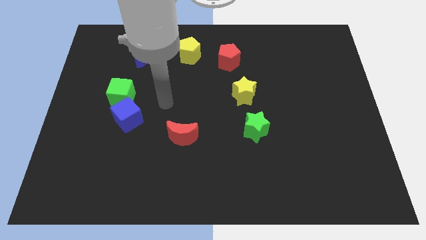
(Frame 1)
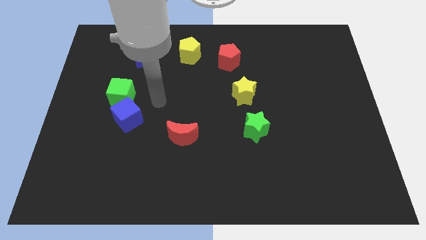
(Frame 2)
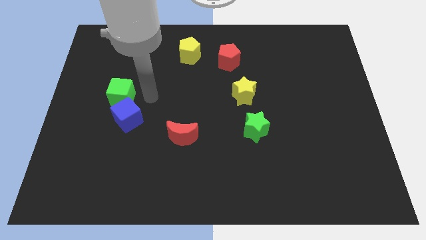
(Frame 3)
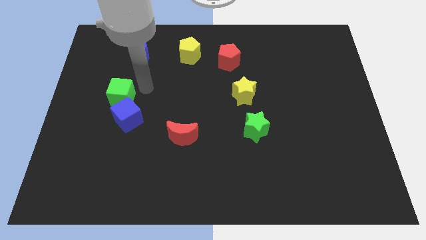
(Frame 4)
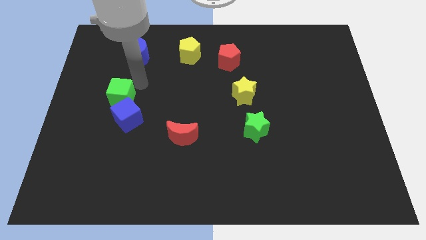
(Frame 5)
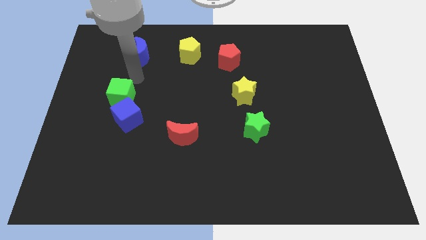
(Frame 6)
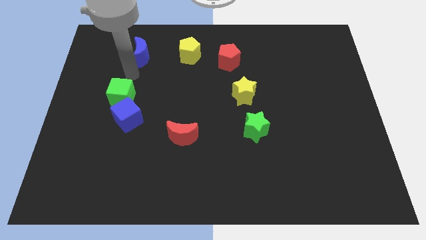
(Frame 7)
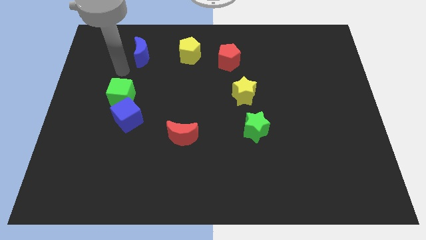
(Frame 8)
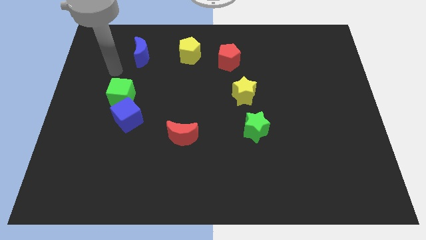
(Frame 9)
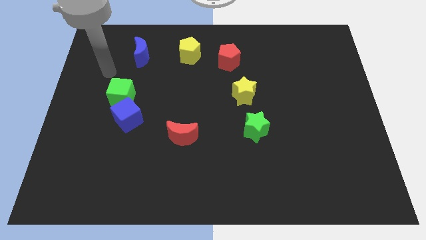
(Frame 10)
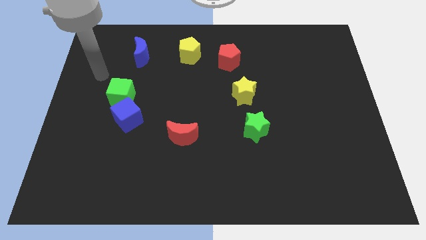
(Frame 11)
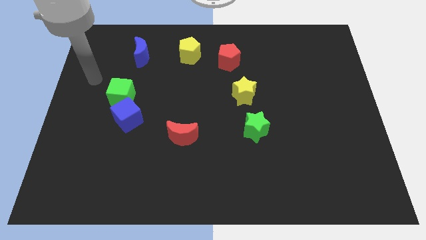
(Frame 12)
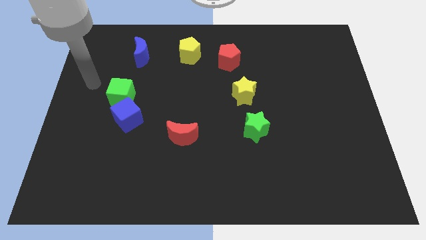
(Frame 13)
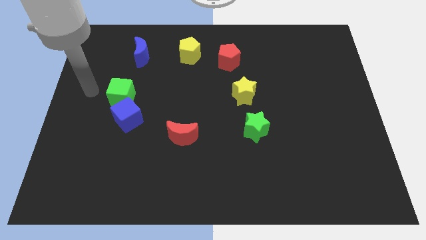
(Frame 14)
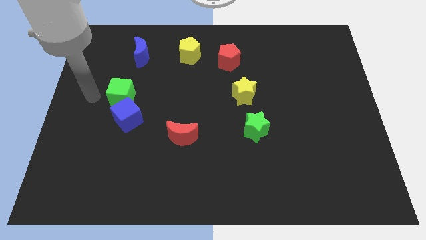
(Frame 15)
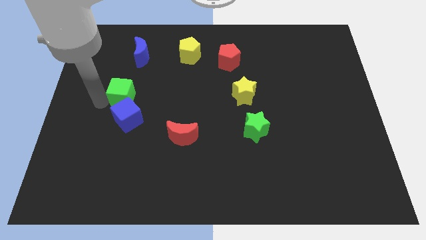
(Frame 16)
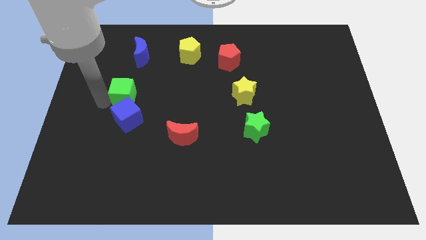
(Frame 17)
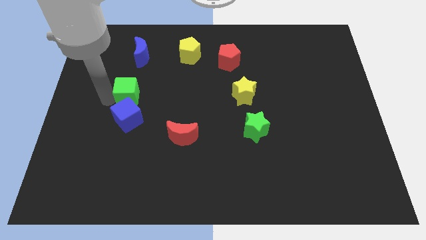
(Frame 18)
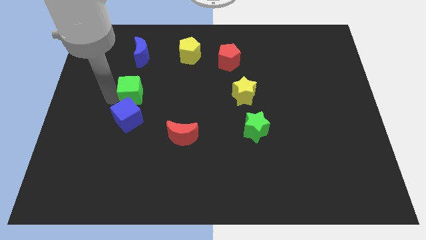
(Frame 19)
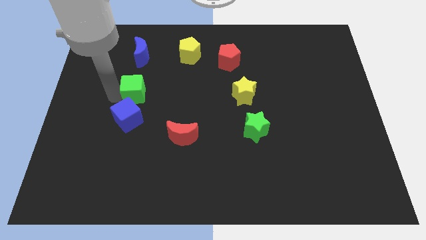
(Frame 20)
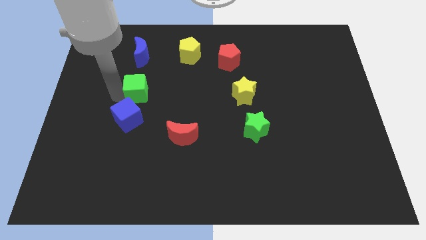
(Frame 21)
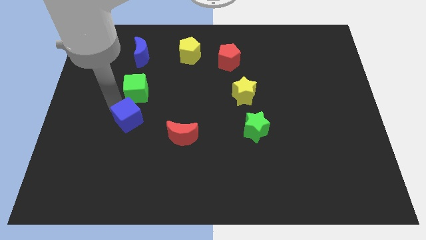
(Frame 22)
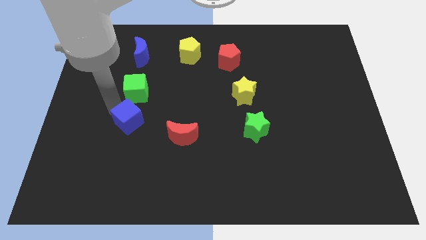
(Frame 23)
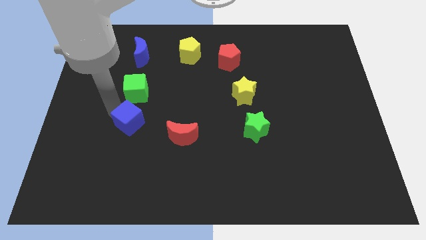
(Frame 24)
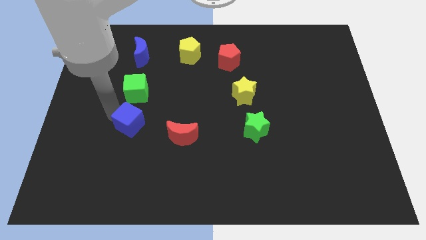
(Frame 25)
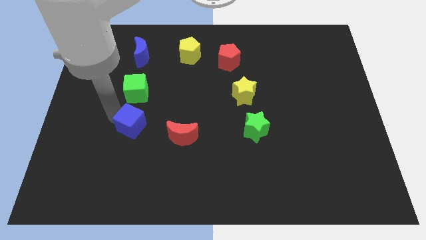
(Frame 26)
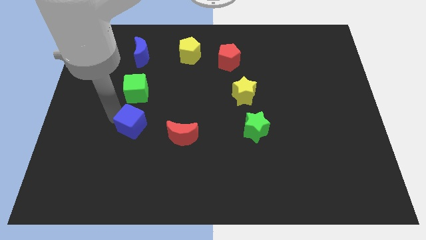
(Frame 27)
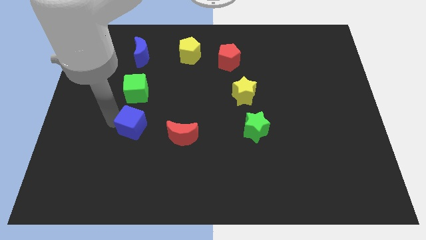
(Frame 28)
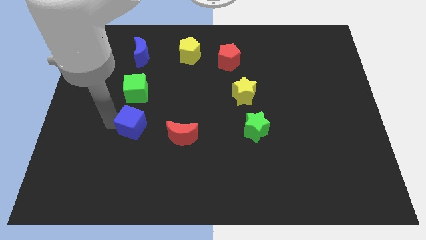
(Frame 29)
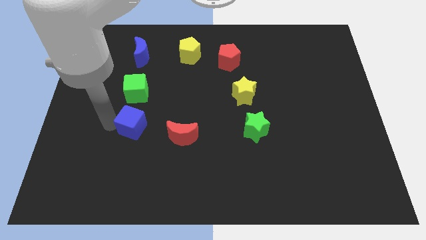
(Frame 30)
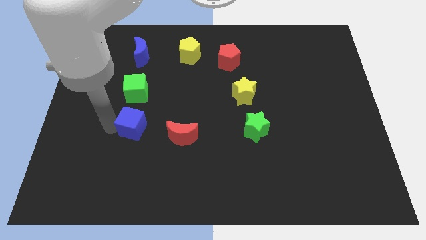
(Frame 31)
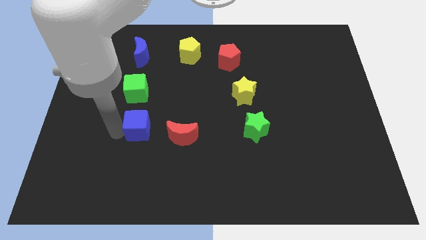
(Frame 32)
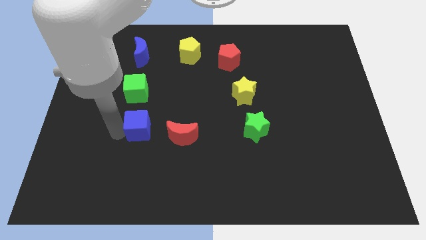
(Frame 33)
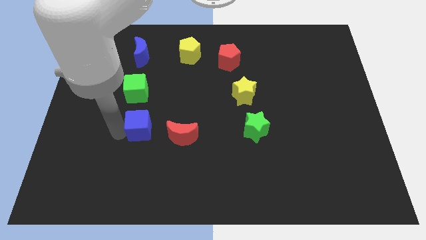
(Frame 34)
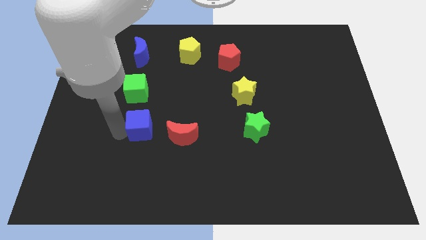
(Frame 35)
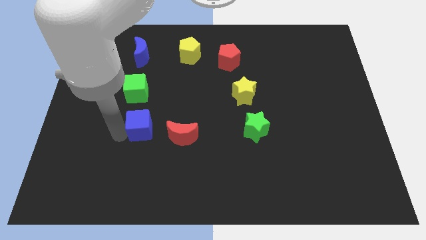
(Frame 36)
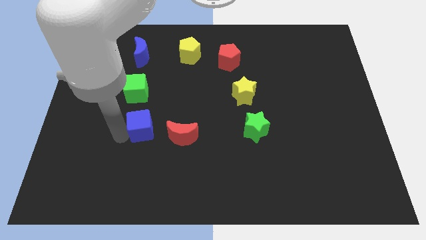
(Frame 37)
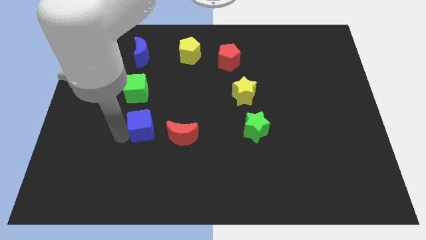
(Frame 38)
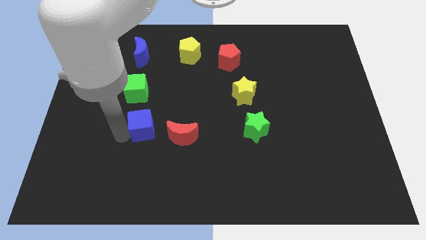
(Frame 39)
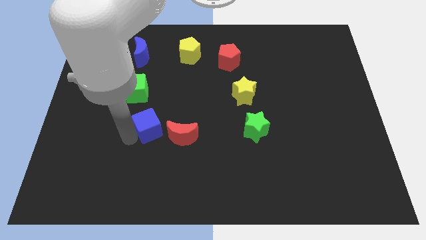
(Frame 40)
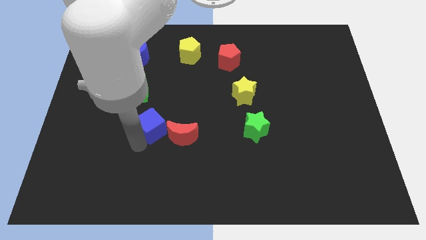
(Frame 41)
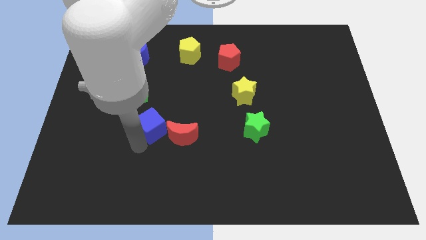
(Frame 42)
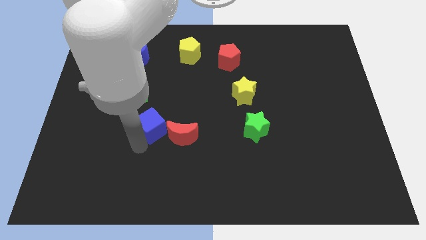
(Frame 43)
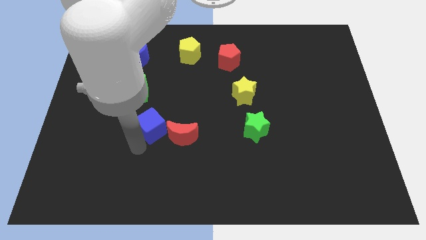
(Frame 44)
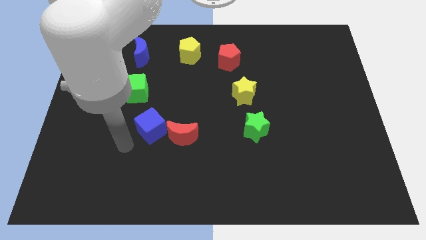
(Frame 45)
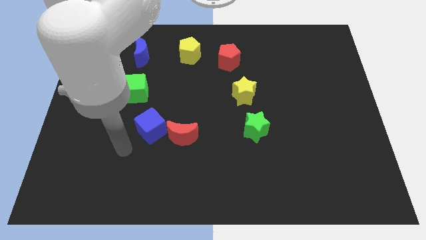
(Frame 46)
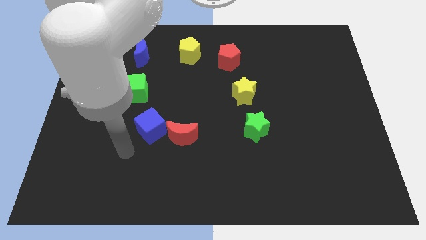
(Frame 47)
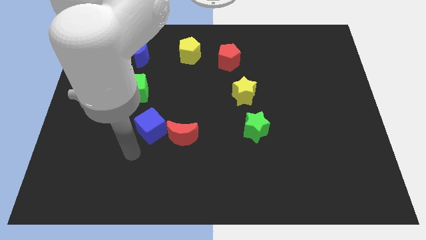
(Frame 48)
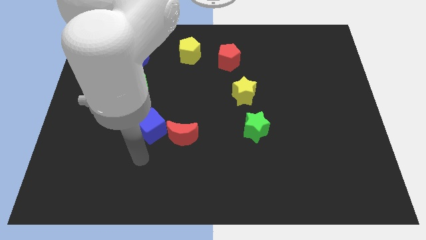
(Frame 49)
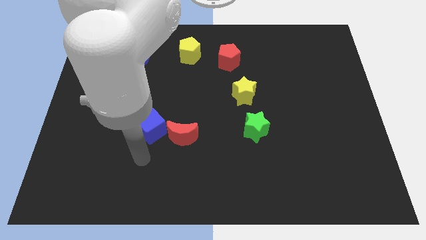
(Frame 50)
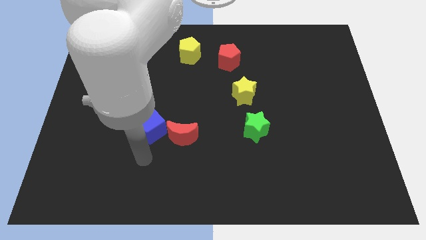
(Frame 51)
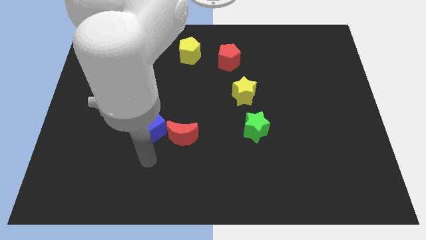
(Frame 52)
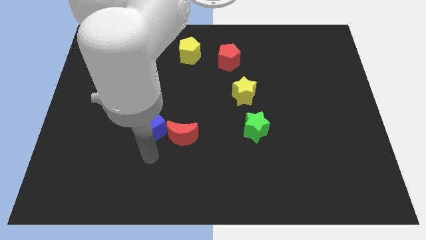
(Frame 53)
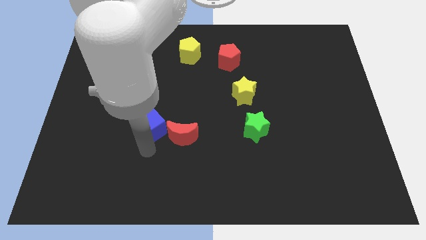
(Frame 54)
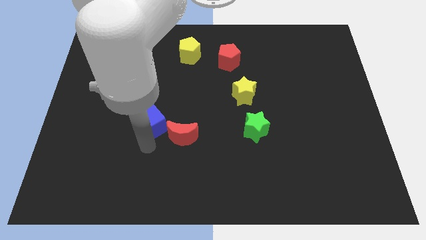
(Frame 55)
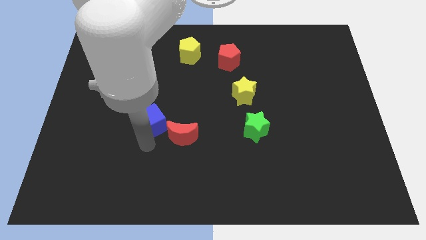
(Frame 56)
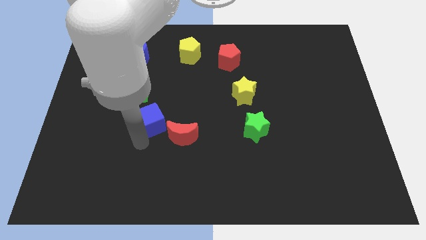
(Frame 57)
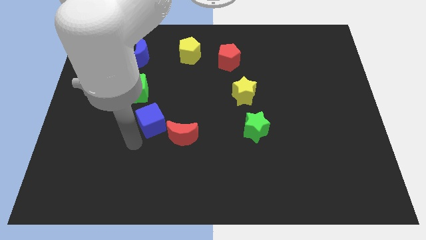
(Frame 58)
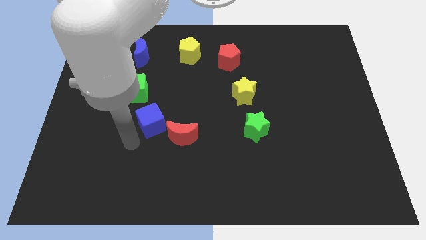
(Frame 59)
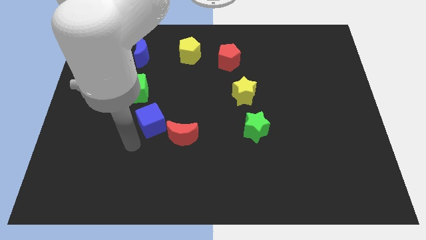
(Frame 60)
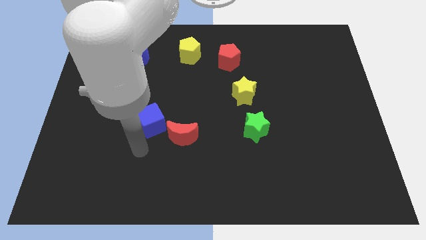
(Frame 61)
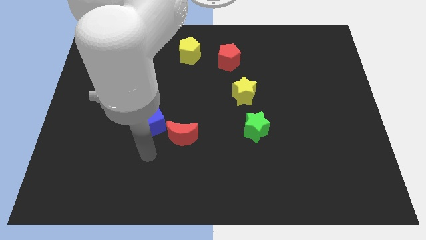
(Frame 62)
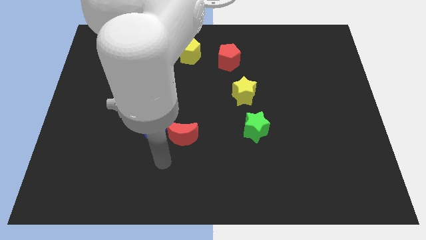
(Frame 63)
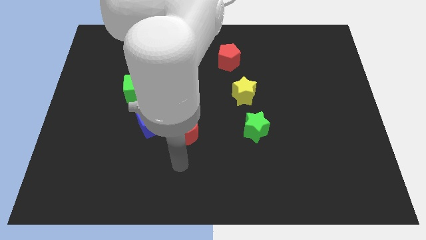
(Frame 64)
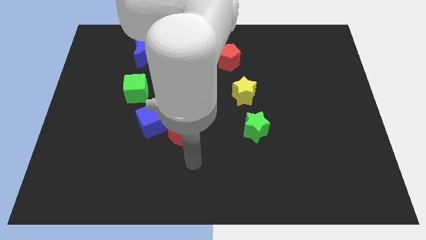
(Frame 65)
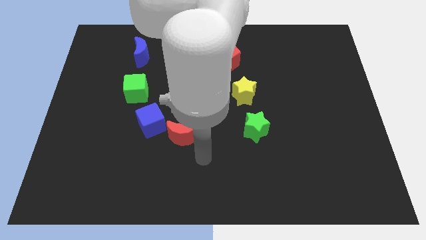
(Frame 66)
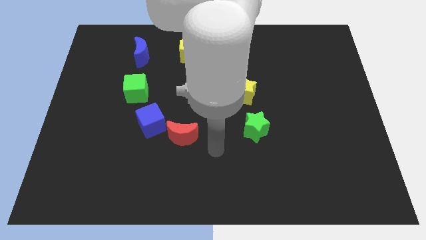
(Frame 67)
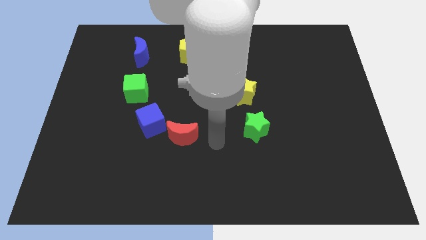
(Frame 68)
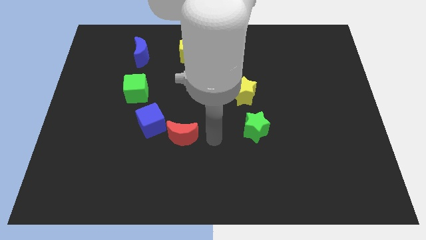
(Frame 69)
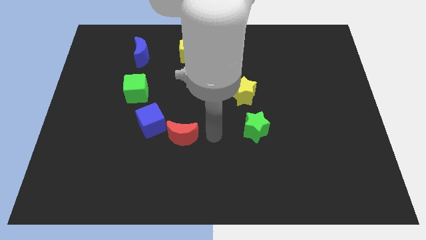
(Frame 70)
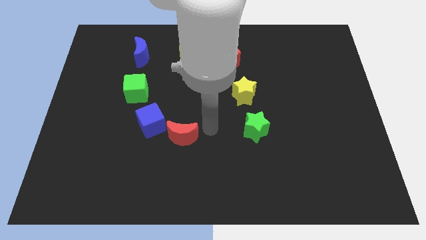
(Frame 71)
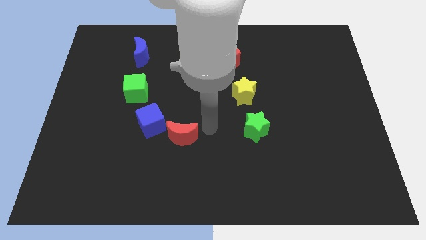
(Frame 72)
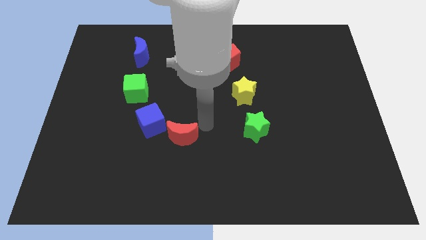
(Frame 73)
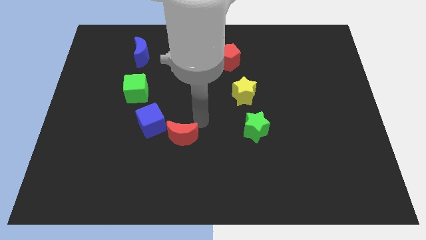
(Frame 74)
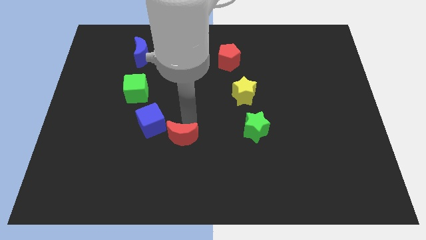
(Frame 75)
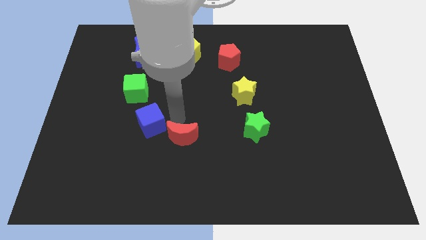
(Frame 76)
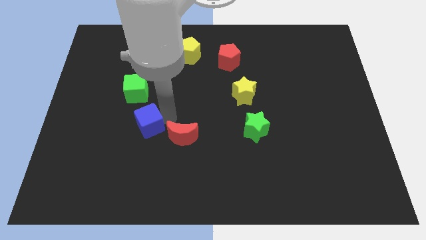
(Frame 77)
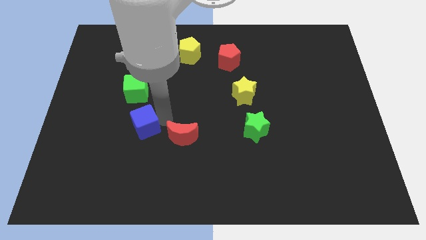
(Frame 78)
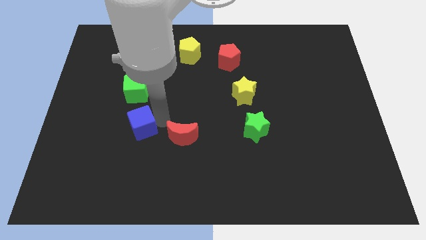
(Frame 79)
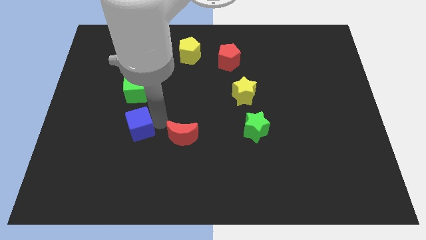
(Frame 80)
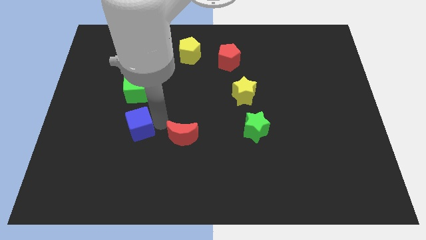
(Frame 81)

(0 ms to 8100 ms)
separate the blue and green cube

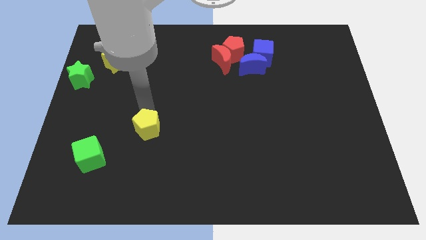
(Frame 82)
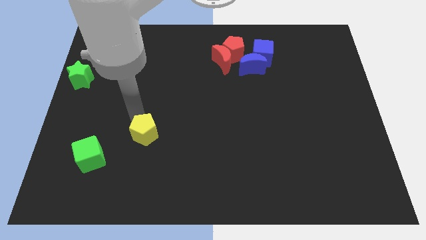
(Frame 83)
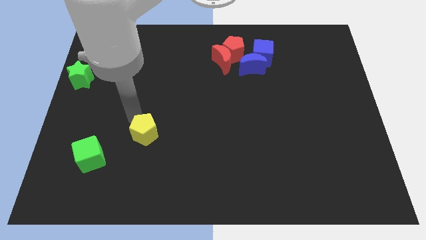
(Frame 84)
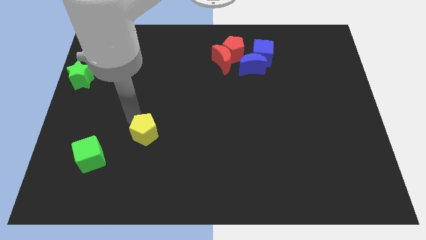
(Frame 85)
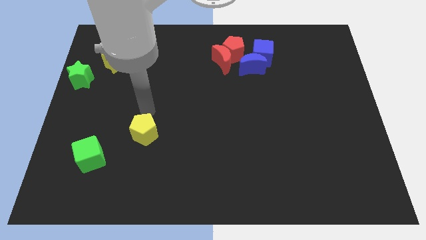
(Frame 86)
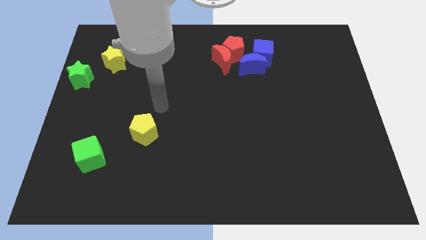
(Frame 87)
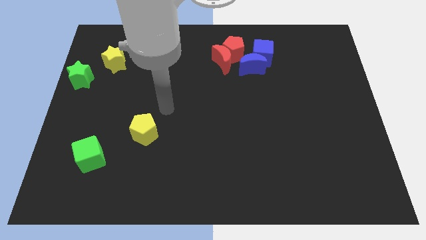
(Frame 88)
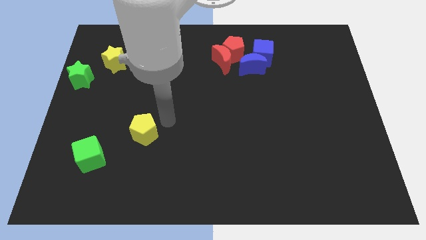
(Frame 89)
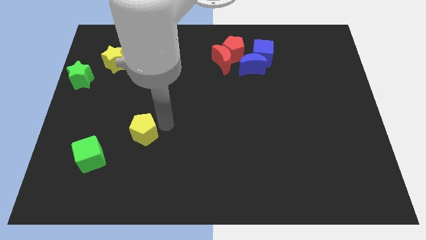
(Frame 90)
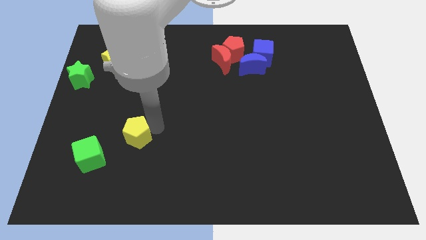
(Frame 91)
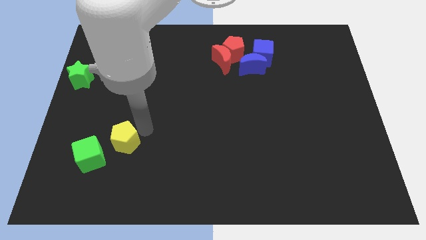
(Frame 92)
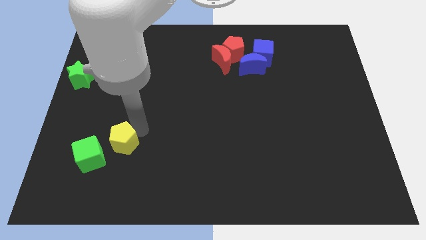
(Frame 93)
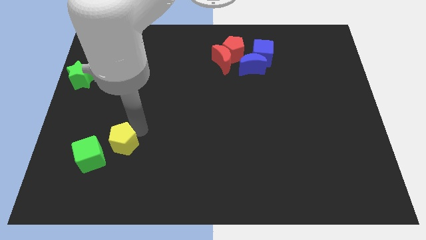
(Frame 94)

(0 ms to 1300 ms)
move the yellow pentagon to the top right of the green cube
